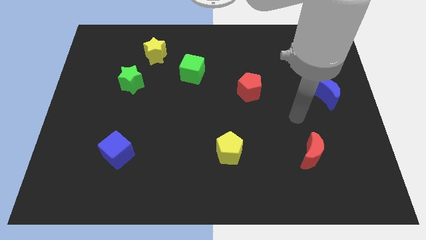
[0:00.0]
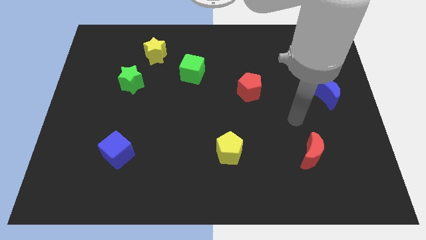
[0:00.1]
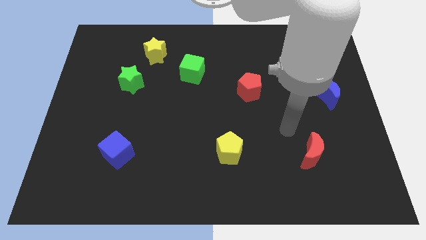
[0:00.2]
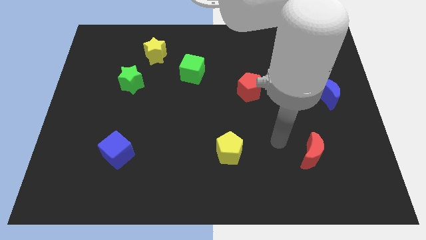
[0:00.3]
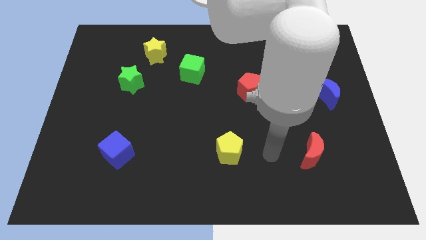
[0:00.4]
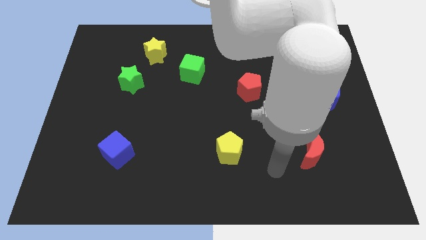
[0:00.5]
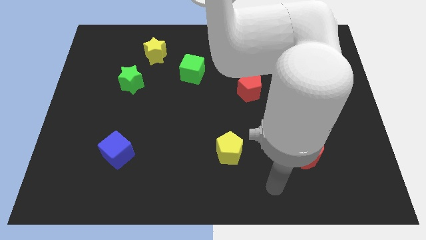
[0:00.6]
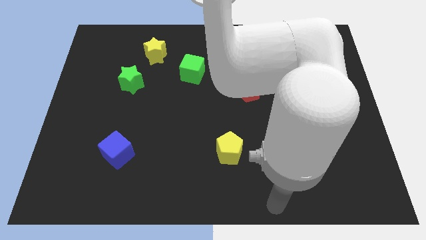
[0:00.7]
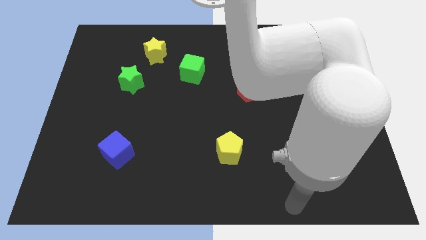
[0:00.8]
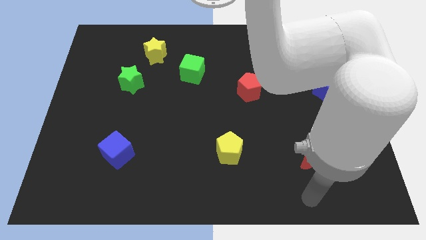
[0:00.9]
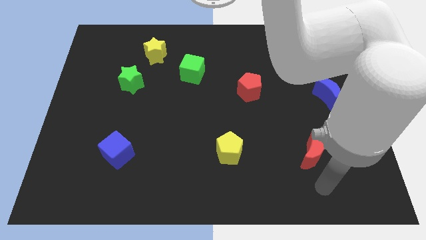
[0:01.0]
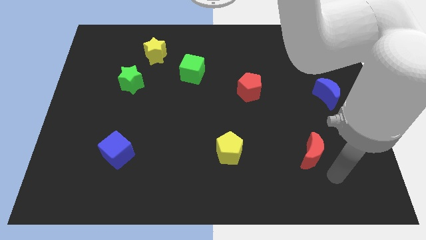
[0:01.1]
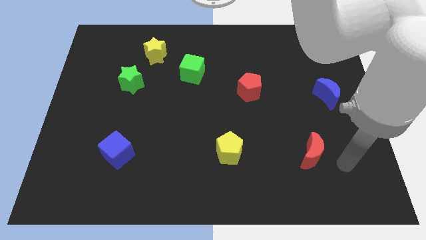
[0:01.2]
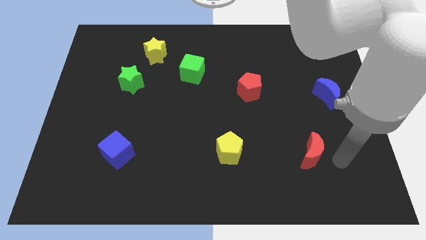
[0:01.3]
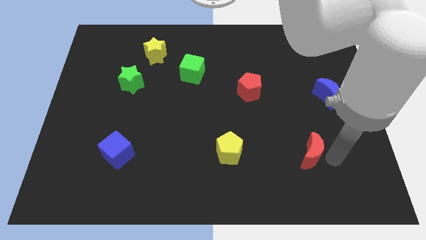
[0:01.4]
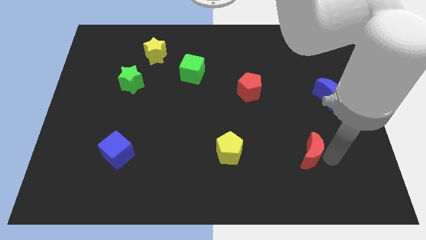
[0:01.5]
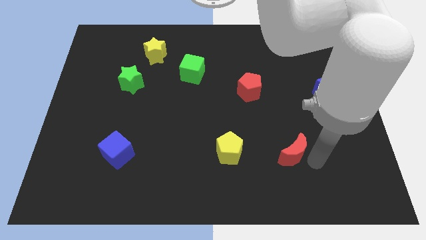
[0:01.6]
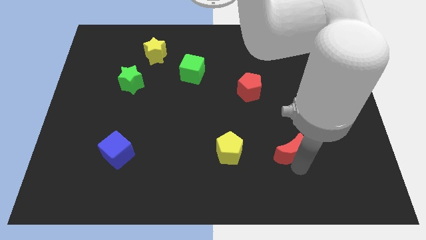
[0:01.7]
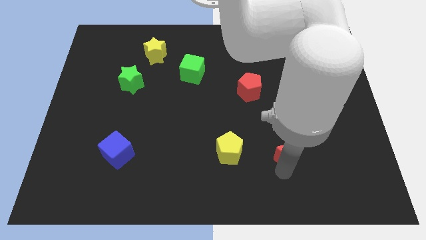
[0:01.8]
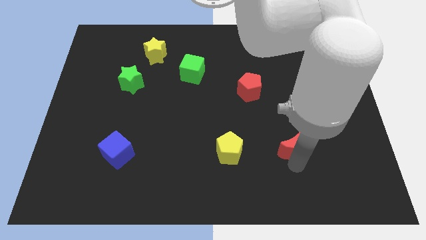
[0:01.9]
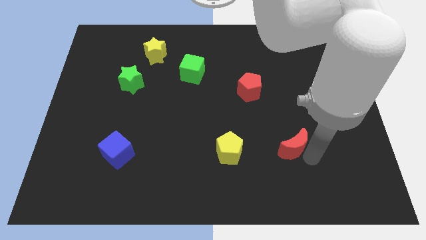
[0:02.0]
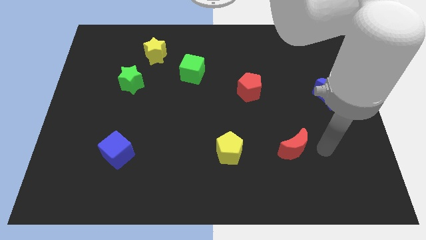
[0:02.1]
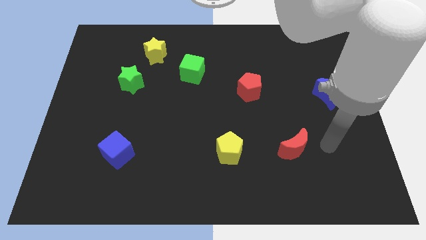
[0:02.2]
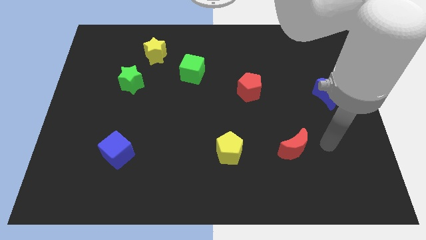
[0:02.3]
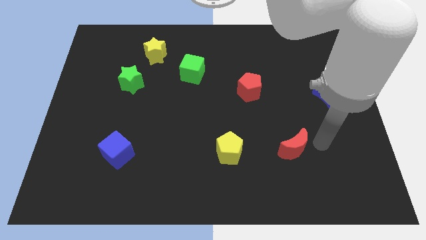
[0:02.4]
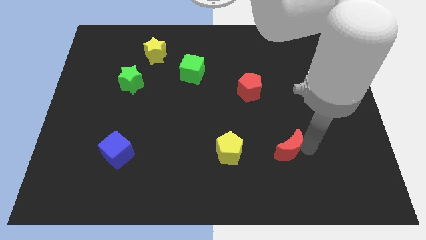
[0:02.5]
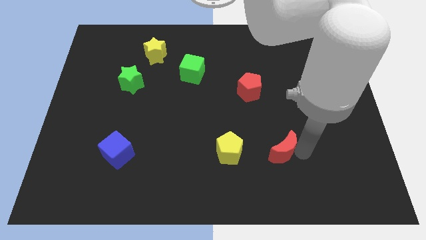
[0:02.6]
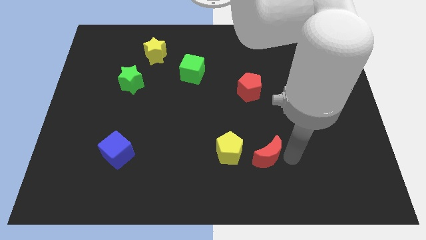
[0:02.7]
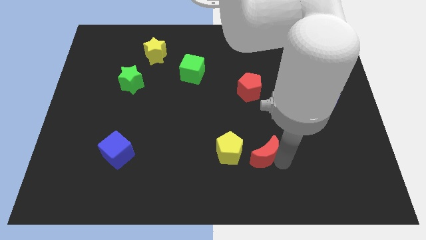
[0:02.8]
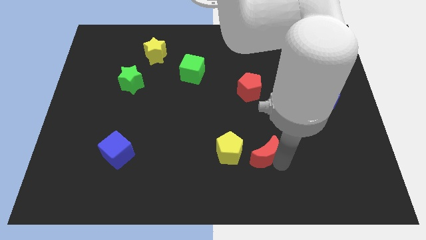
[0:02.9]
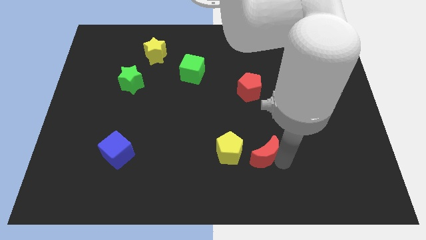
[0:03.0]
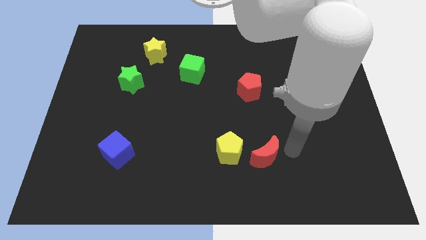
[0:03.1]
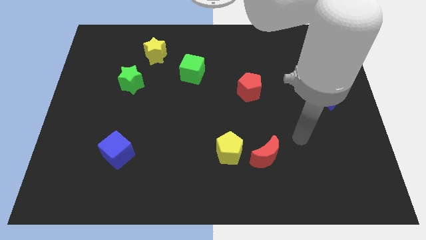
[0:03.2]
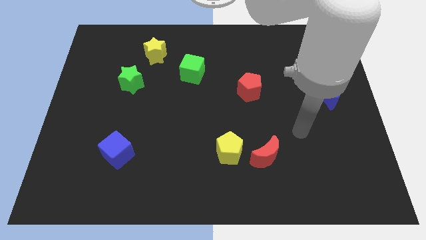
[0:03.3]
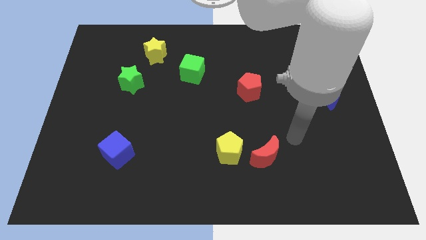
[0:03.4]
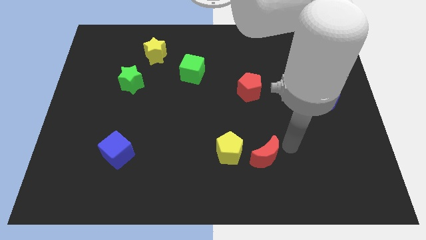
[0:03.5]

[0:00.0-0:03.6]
move red moon towards yellow pentagon

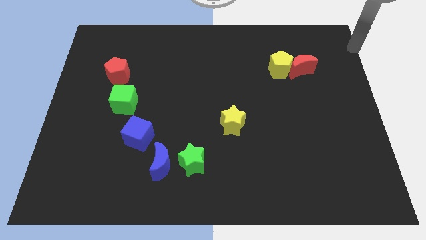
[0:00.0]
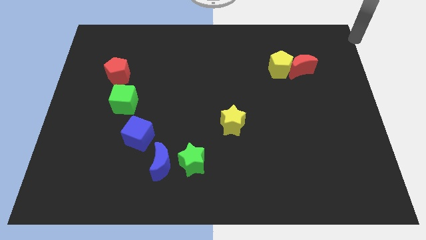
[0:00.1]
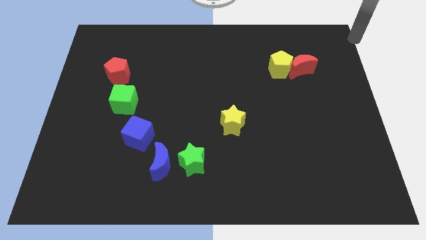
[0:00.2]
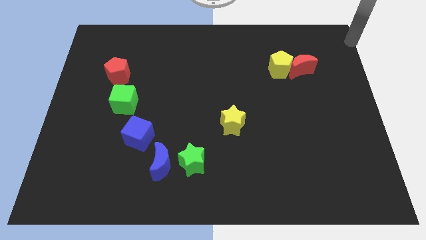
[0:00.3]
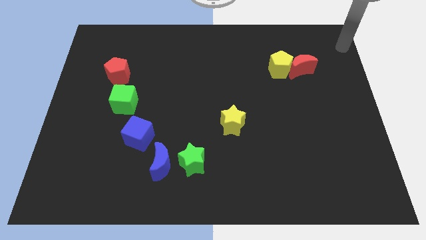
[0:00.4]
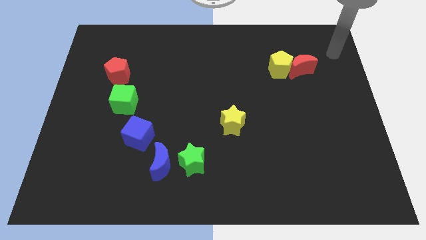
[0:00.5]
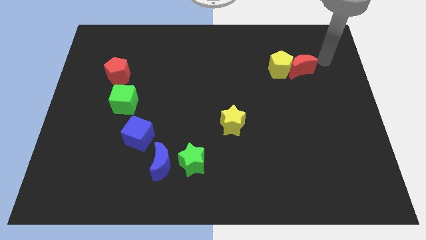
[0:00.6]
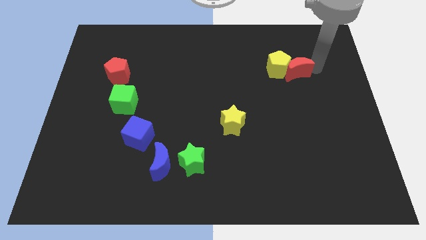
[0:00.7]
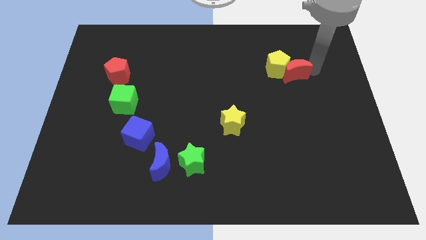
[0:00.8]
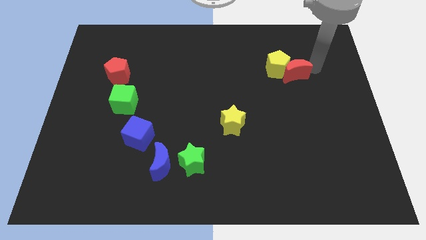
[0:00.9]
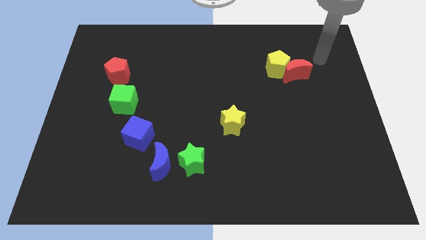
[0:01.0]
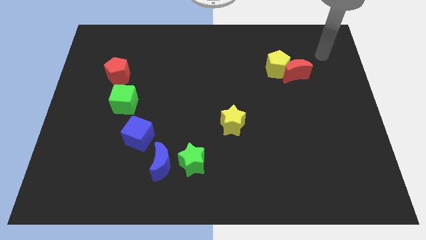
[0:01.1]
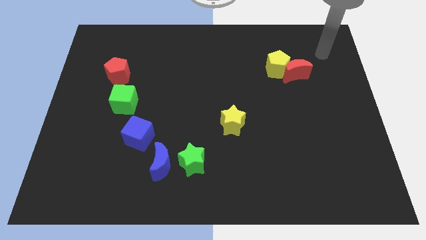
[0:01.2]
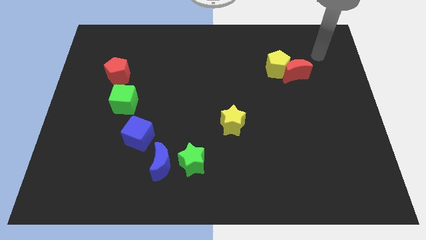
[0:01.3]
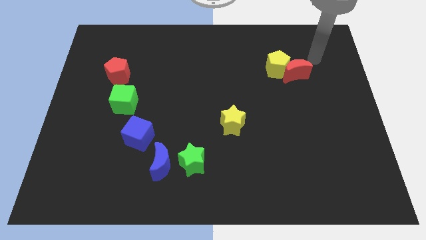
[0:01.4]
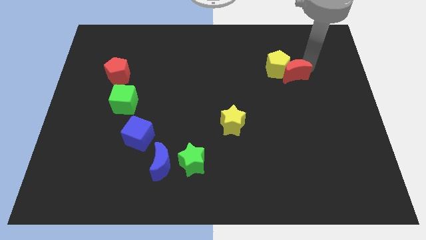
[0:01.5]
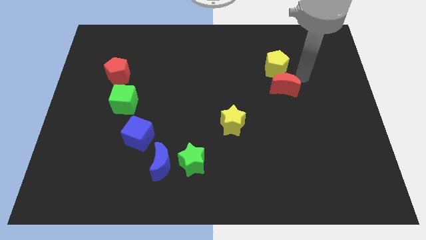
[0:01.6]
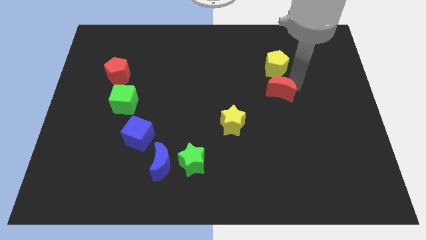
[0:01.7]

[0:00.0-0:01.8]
push red crescent towards the yellow star

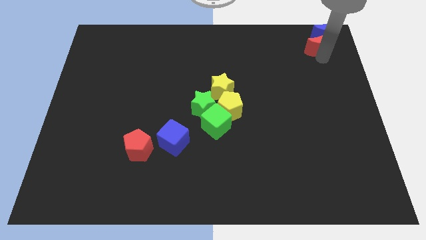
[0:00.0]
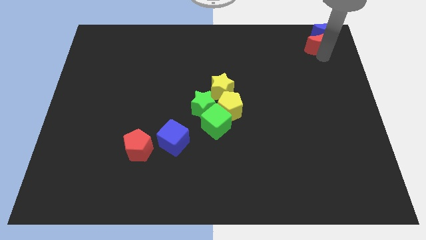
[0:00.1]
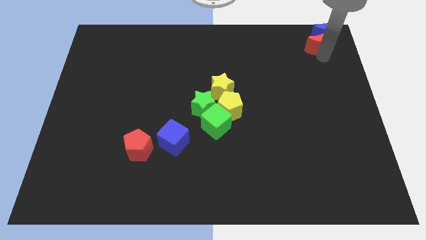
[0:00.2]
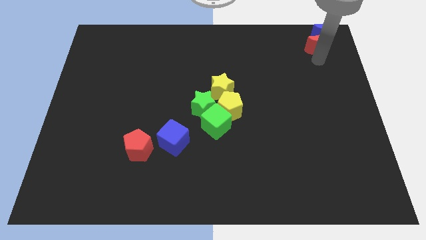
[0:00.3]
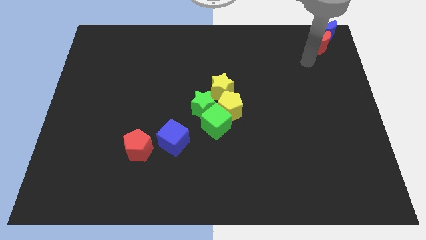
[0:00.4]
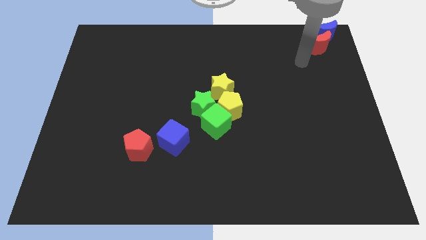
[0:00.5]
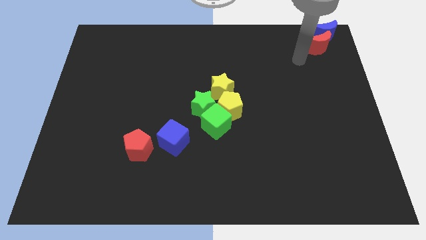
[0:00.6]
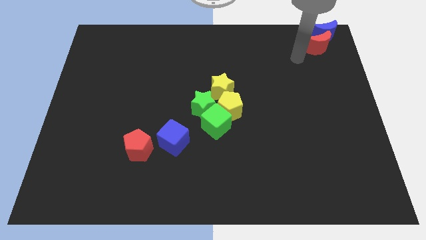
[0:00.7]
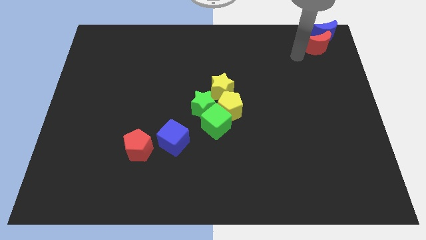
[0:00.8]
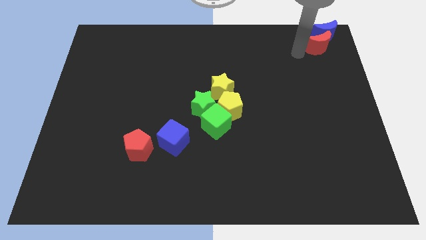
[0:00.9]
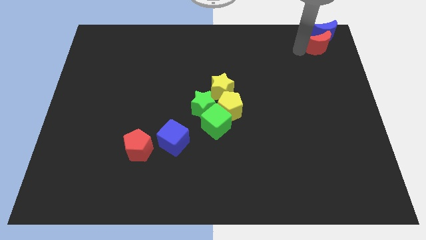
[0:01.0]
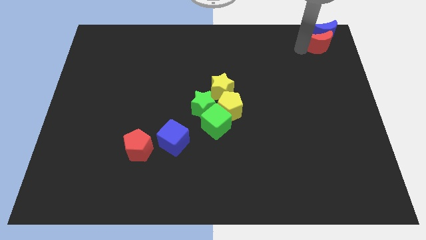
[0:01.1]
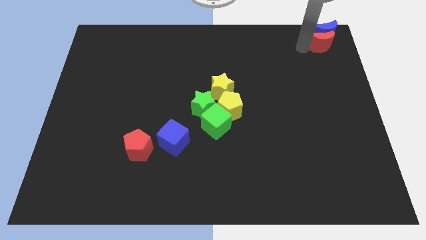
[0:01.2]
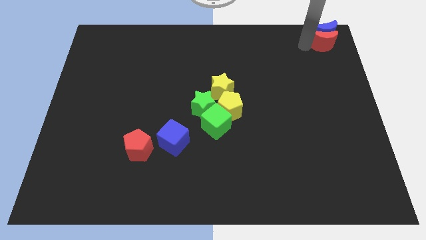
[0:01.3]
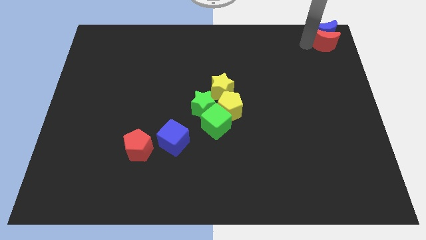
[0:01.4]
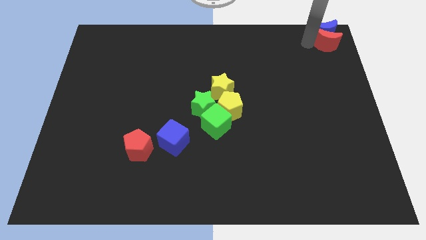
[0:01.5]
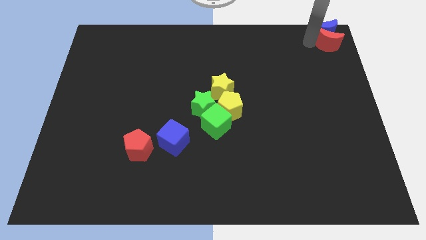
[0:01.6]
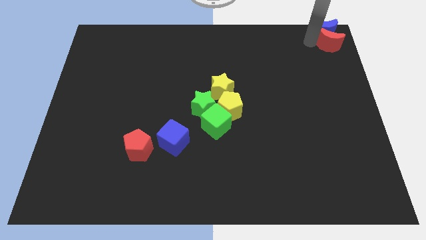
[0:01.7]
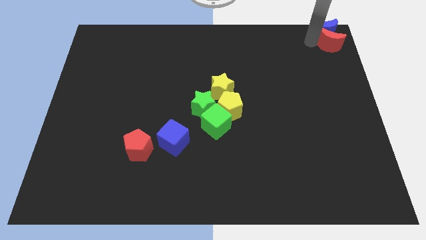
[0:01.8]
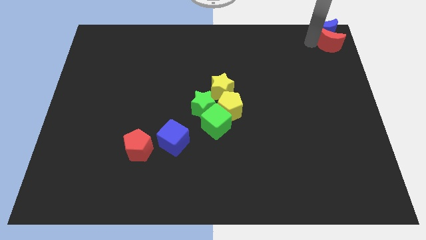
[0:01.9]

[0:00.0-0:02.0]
push the red crescent into the blue crescent

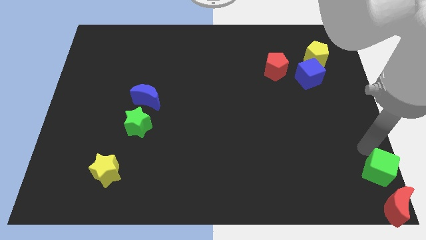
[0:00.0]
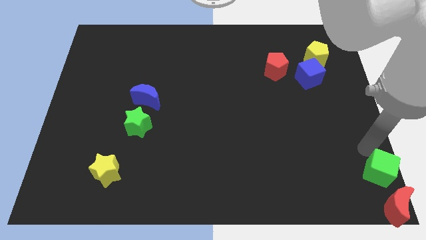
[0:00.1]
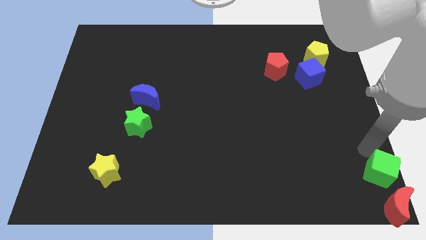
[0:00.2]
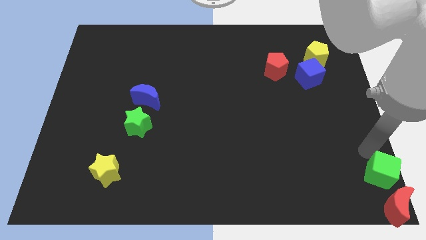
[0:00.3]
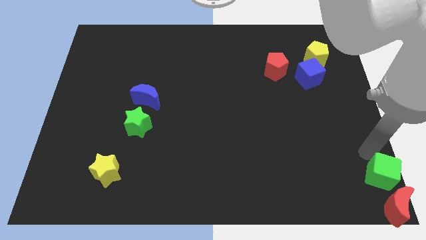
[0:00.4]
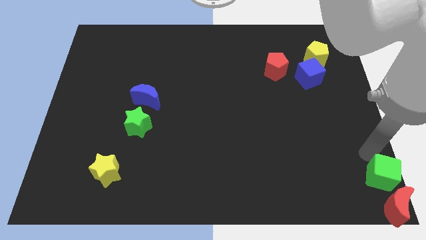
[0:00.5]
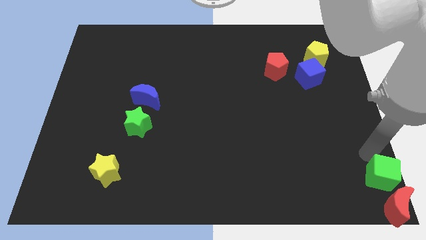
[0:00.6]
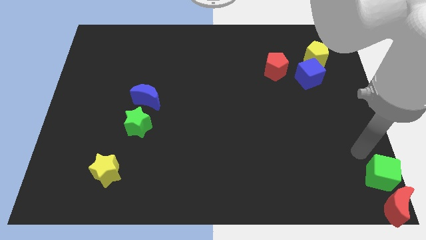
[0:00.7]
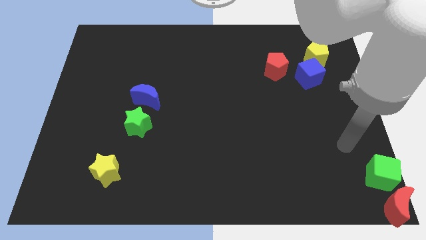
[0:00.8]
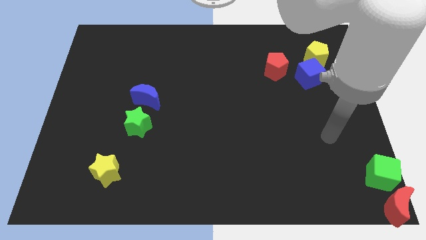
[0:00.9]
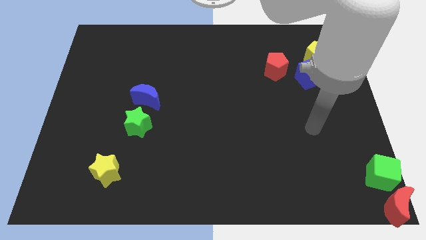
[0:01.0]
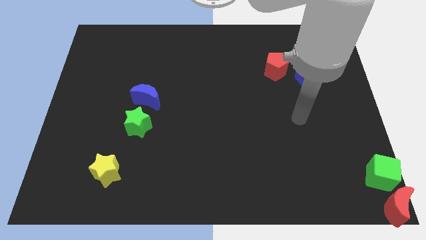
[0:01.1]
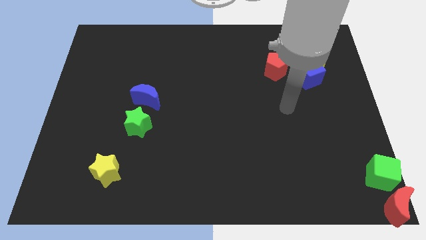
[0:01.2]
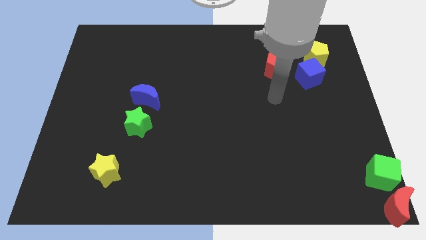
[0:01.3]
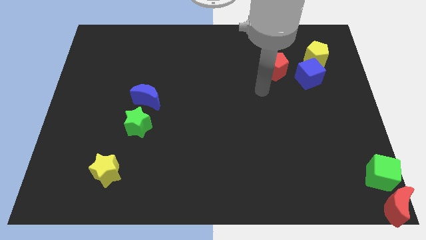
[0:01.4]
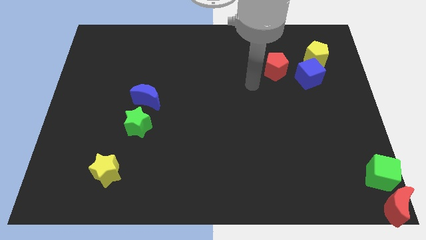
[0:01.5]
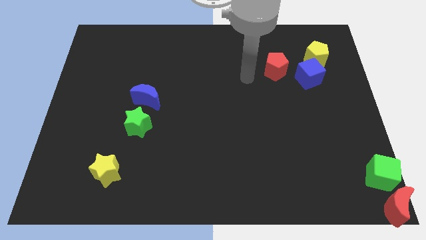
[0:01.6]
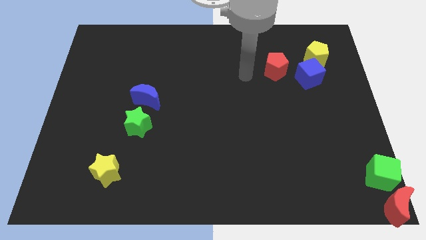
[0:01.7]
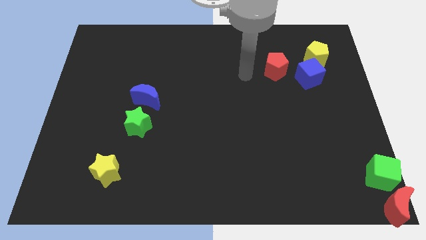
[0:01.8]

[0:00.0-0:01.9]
place the green cube at the top of the red moon
